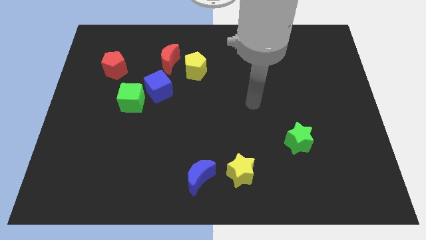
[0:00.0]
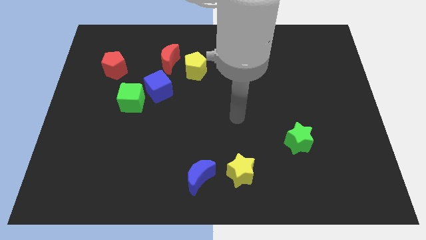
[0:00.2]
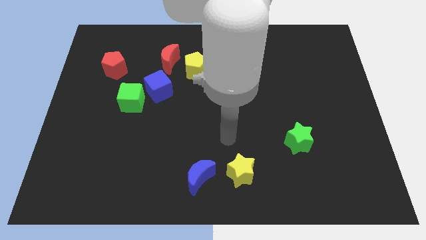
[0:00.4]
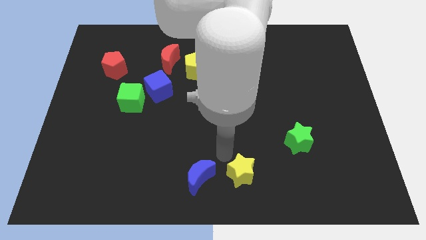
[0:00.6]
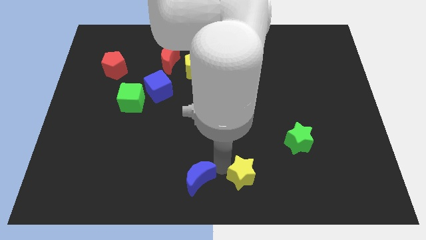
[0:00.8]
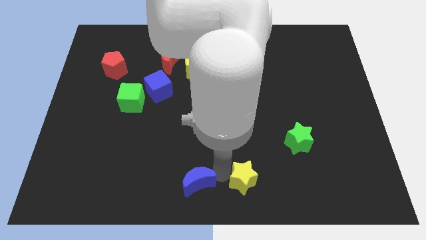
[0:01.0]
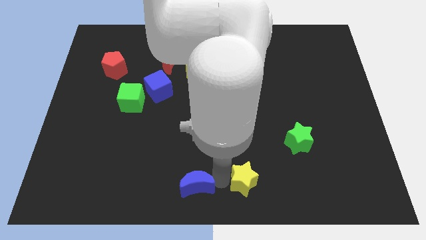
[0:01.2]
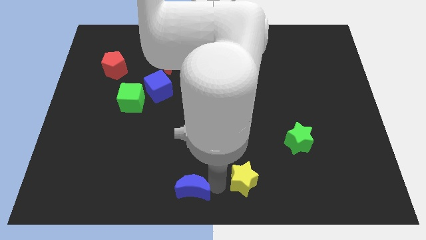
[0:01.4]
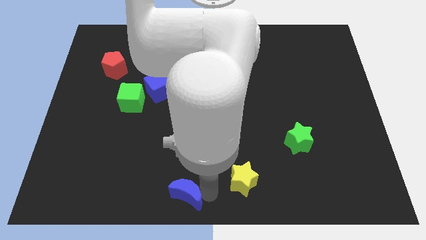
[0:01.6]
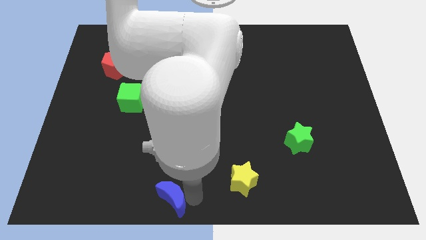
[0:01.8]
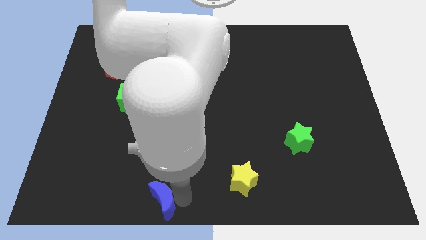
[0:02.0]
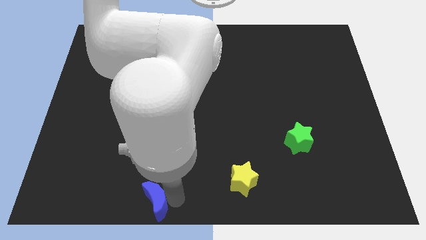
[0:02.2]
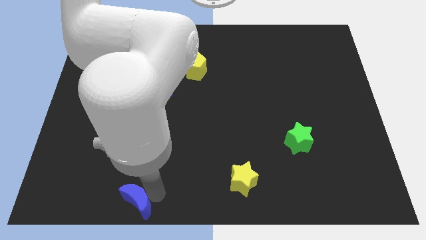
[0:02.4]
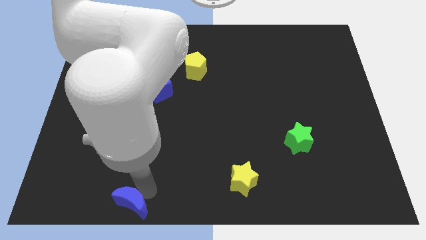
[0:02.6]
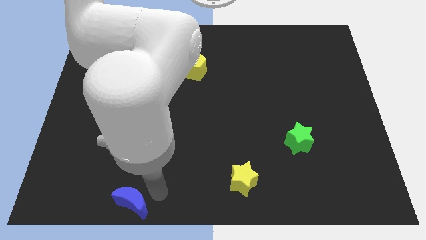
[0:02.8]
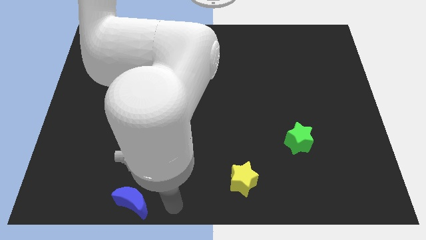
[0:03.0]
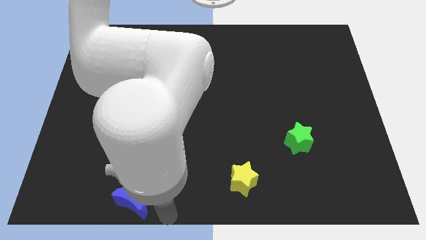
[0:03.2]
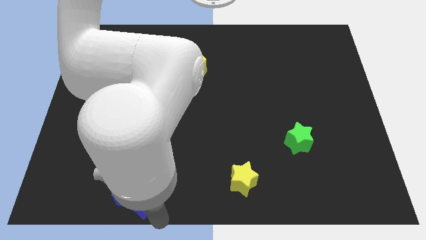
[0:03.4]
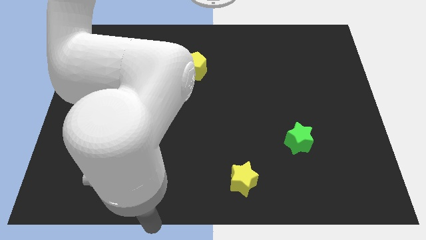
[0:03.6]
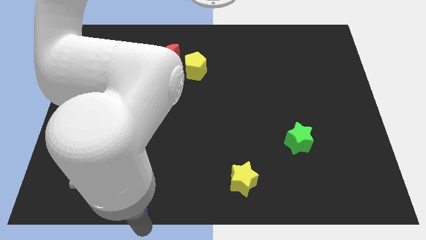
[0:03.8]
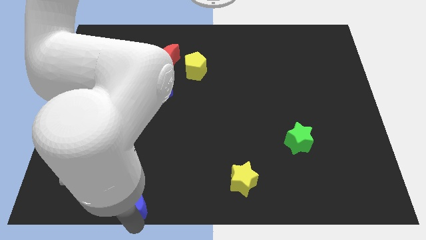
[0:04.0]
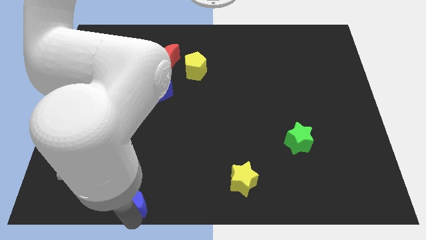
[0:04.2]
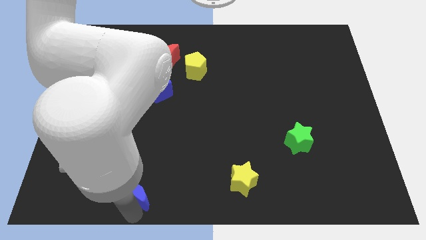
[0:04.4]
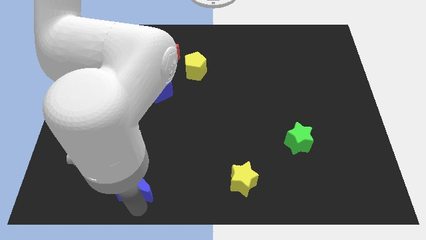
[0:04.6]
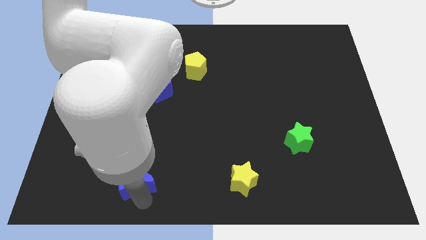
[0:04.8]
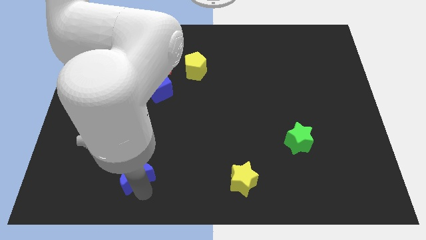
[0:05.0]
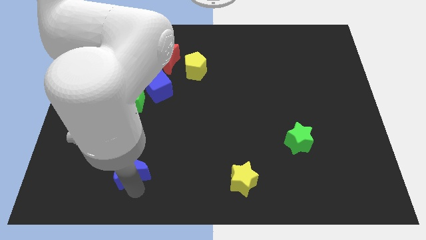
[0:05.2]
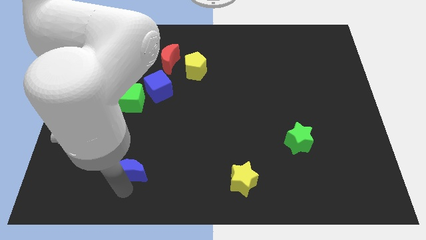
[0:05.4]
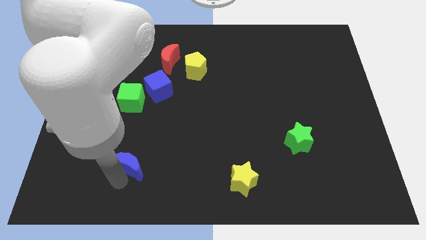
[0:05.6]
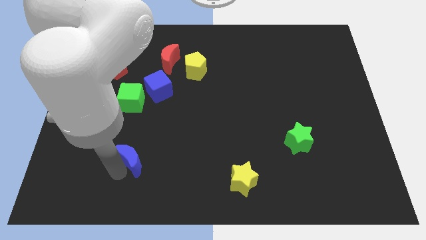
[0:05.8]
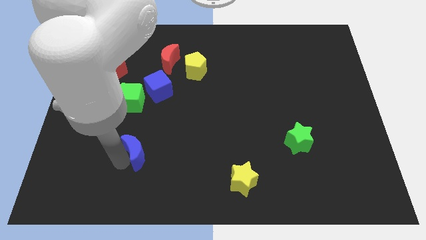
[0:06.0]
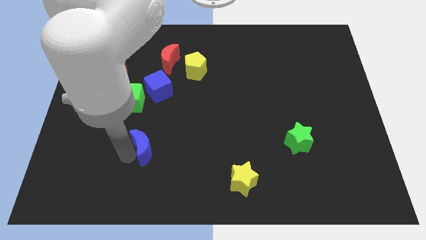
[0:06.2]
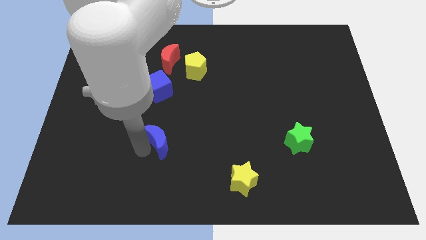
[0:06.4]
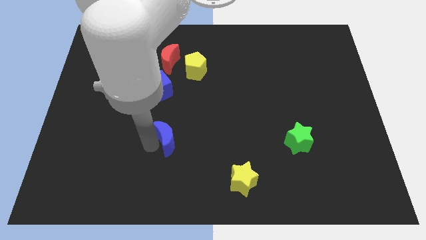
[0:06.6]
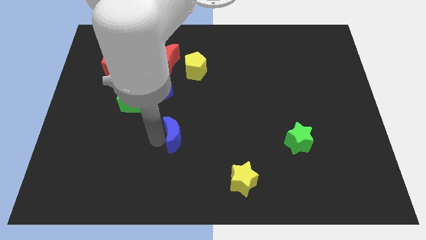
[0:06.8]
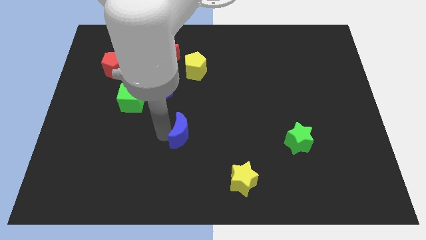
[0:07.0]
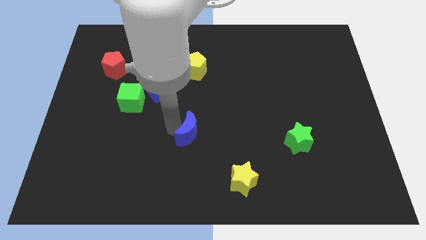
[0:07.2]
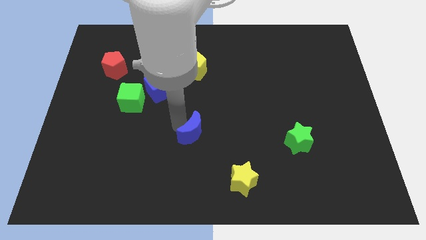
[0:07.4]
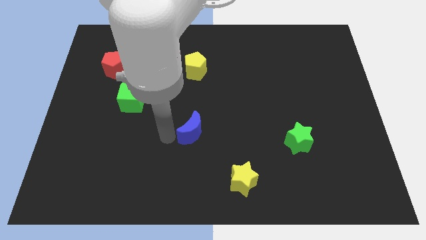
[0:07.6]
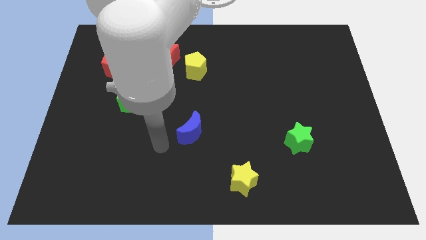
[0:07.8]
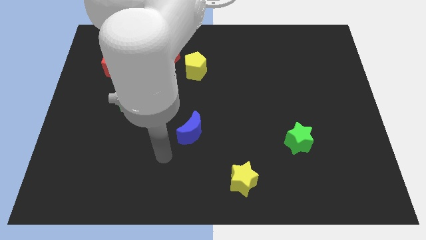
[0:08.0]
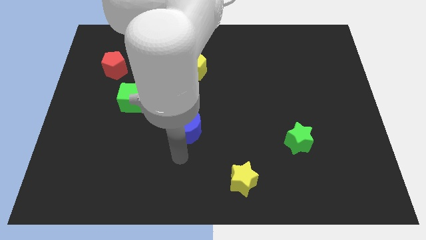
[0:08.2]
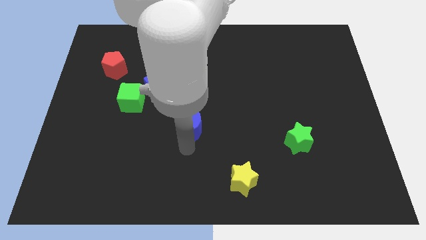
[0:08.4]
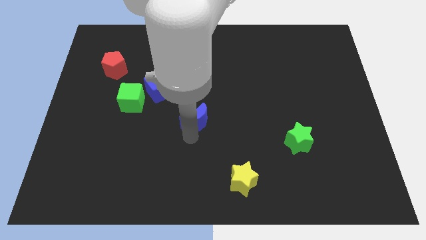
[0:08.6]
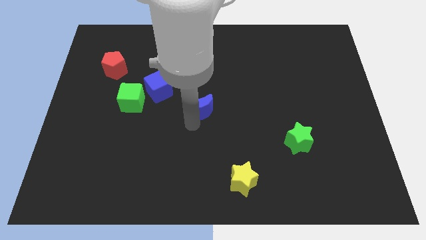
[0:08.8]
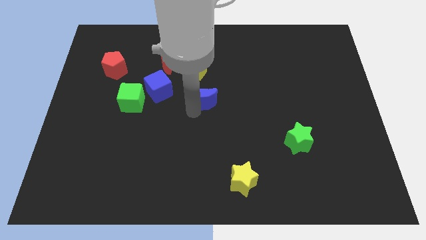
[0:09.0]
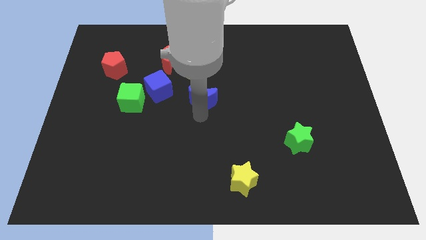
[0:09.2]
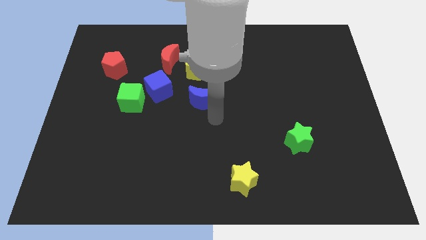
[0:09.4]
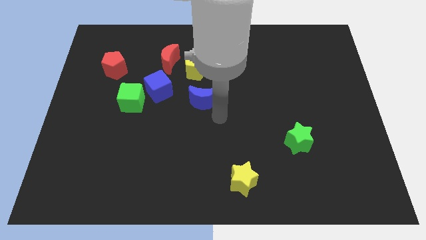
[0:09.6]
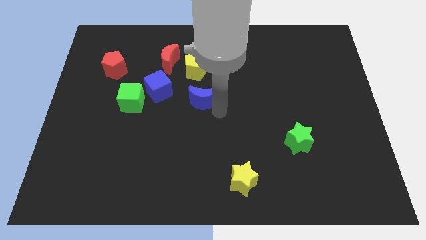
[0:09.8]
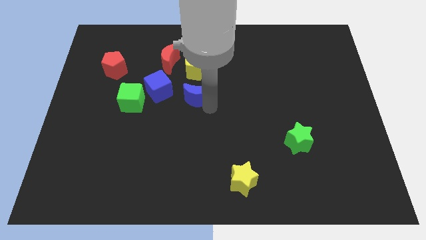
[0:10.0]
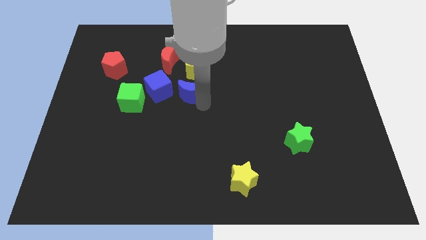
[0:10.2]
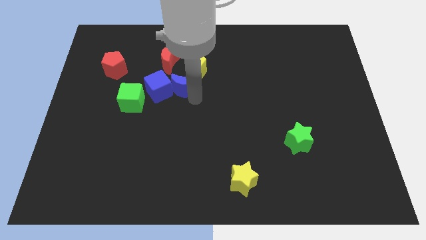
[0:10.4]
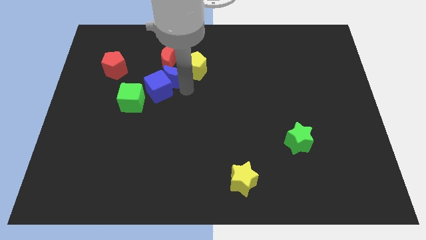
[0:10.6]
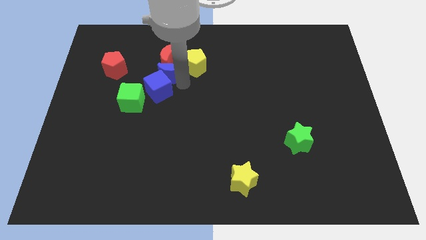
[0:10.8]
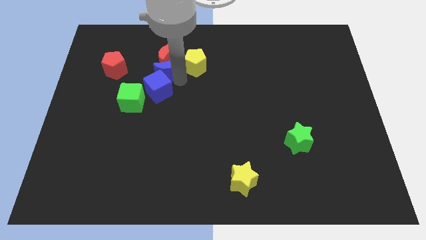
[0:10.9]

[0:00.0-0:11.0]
slide the blue moon towards the red moon

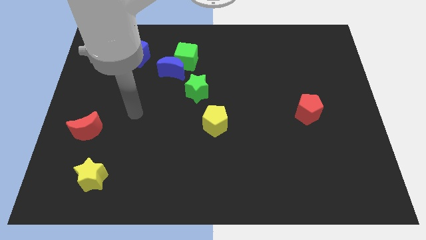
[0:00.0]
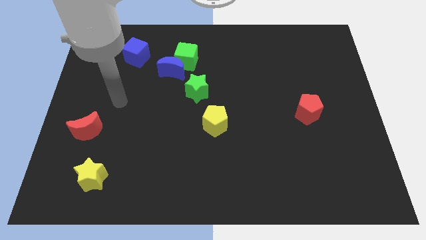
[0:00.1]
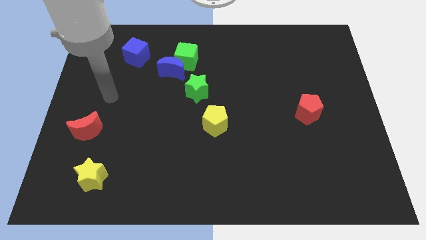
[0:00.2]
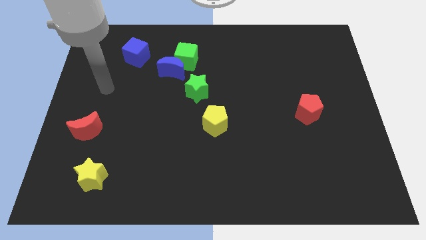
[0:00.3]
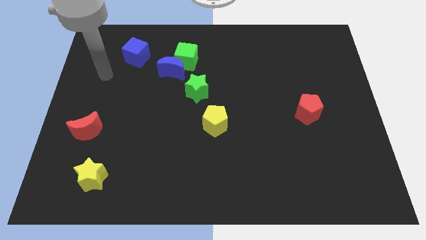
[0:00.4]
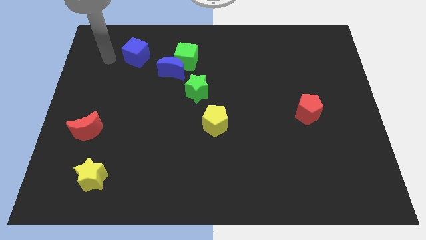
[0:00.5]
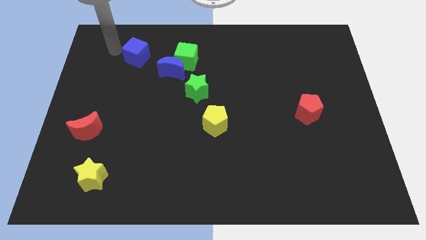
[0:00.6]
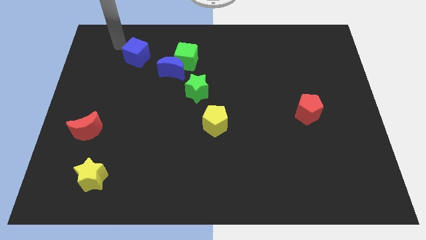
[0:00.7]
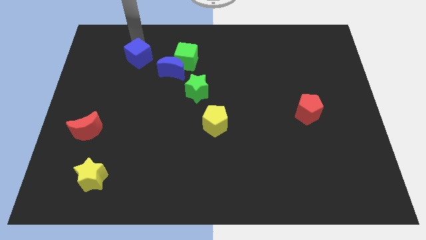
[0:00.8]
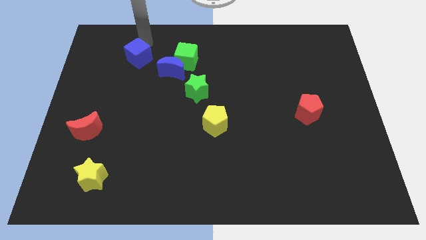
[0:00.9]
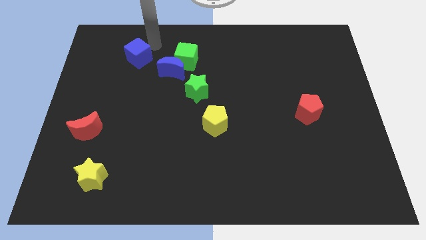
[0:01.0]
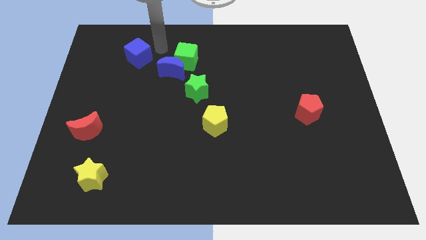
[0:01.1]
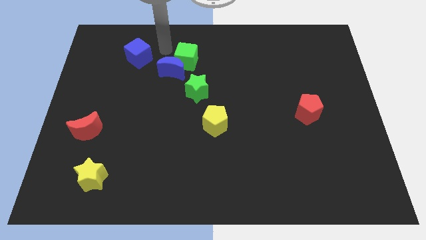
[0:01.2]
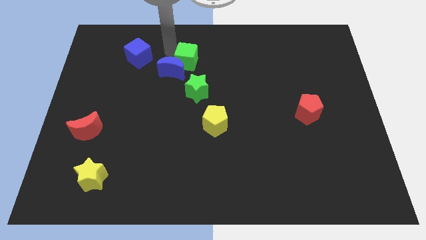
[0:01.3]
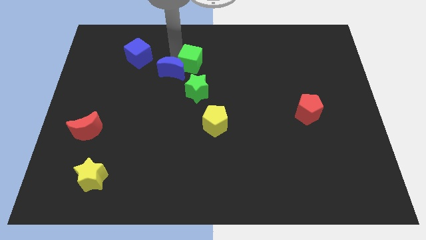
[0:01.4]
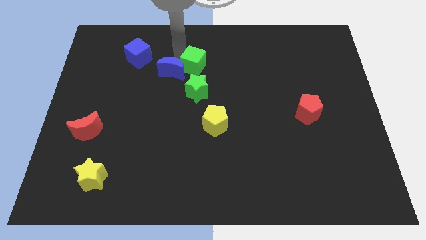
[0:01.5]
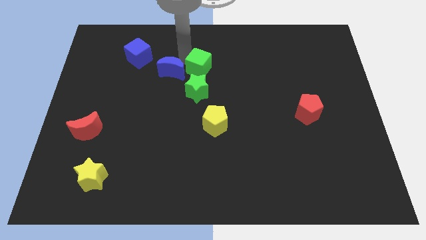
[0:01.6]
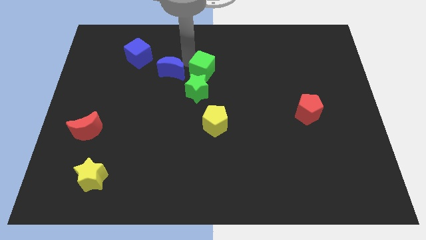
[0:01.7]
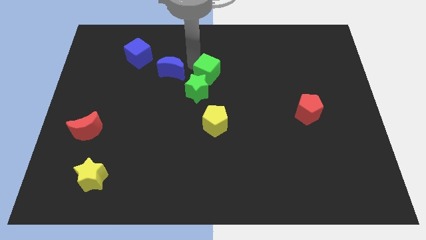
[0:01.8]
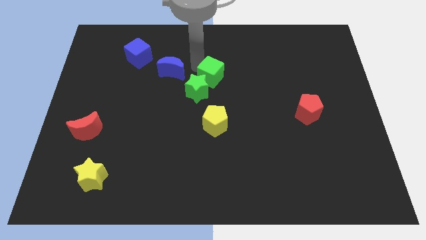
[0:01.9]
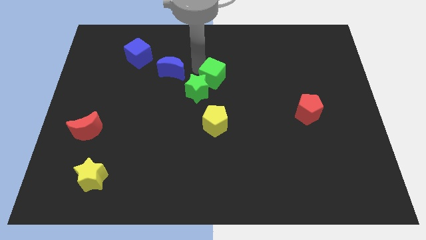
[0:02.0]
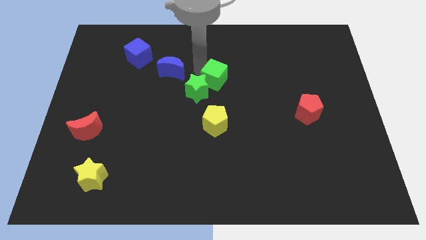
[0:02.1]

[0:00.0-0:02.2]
put the green cube to the green star

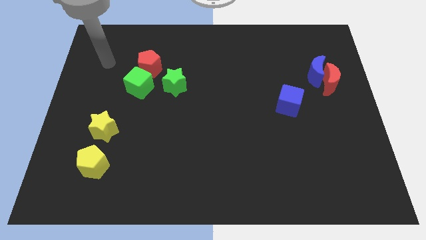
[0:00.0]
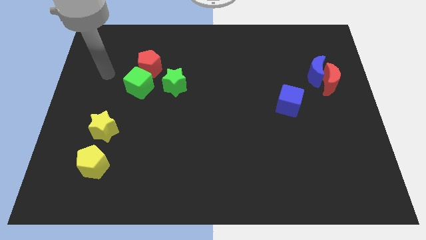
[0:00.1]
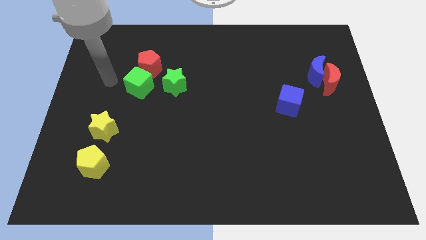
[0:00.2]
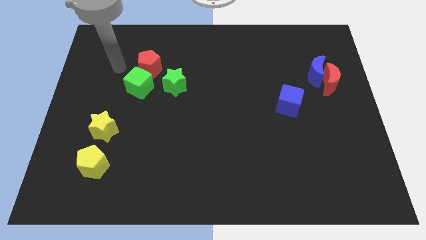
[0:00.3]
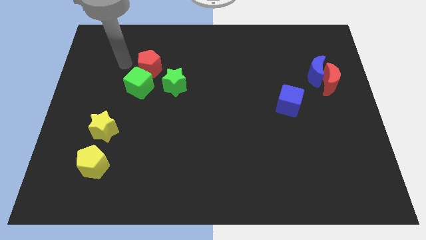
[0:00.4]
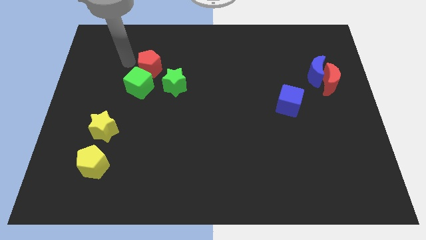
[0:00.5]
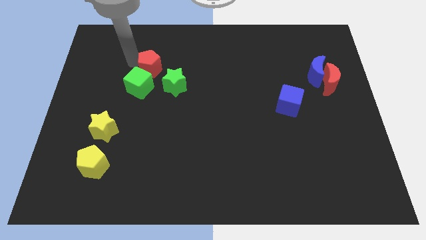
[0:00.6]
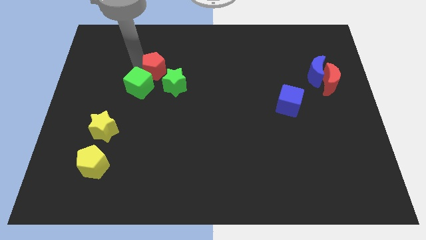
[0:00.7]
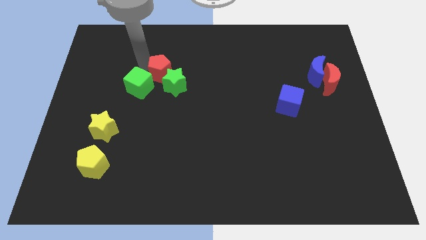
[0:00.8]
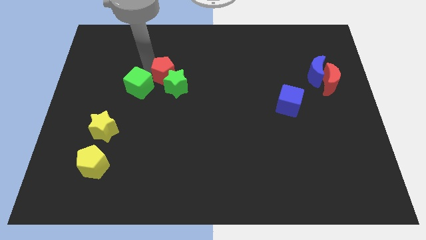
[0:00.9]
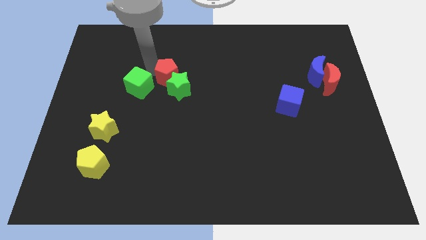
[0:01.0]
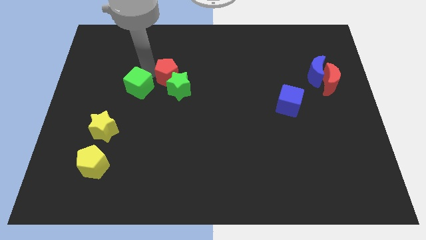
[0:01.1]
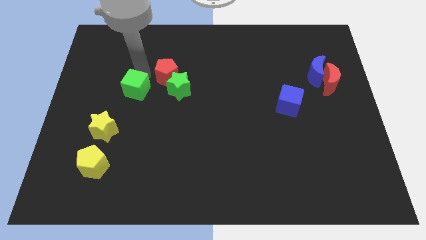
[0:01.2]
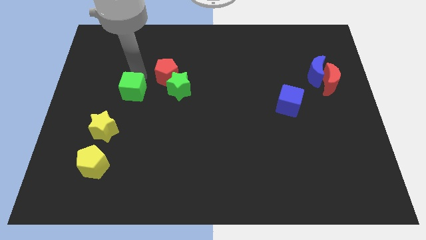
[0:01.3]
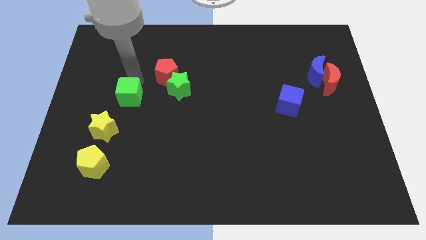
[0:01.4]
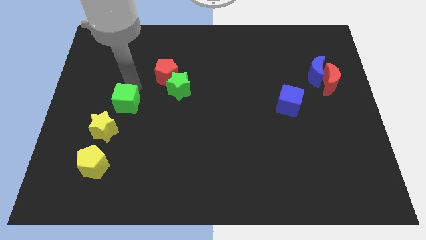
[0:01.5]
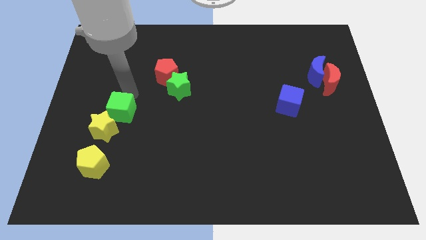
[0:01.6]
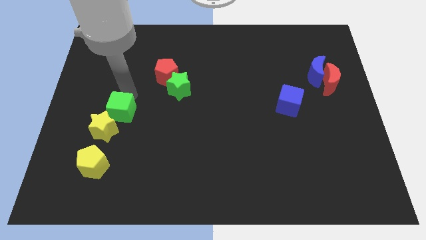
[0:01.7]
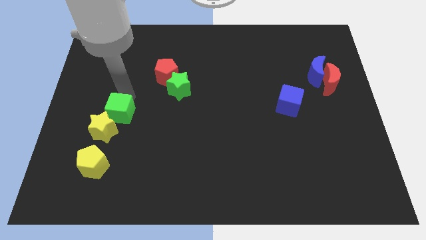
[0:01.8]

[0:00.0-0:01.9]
slide the green cube towards the yellow star
